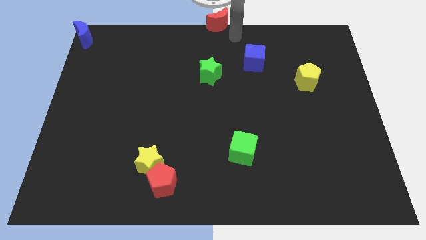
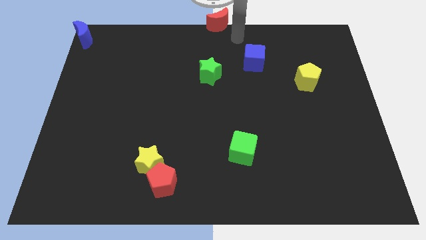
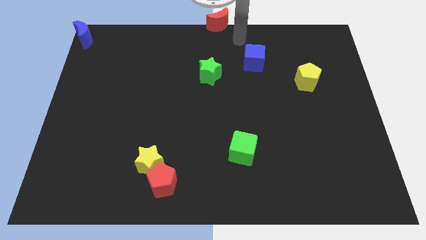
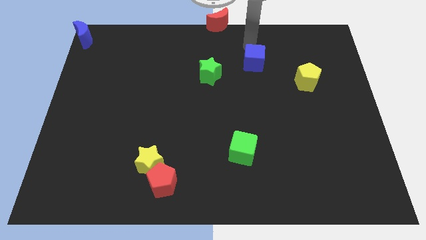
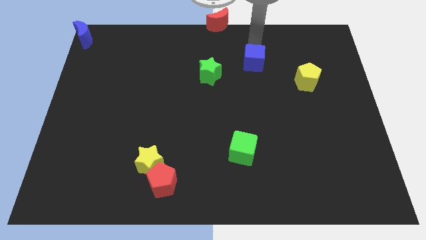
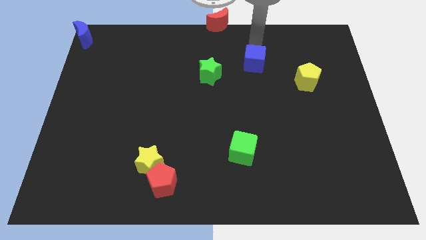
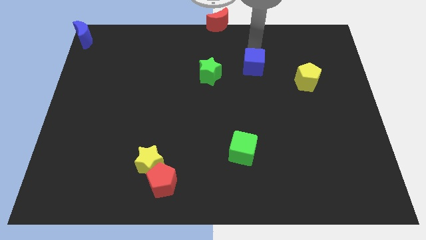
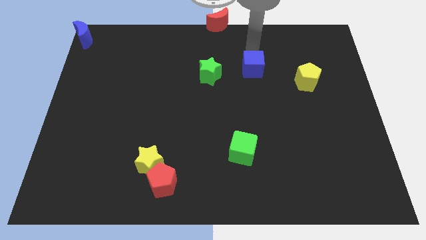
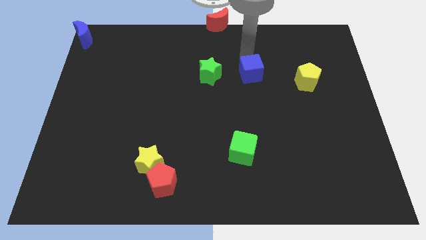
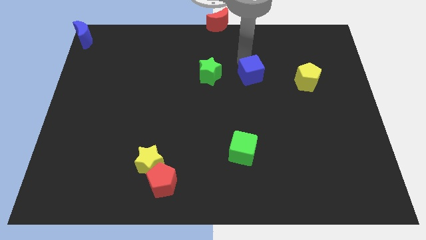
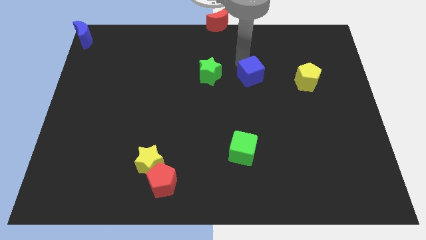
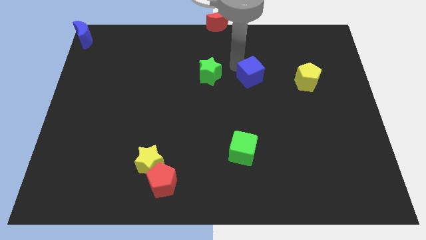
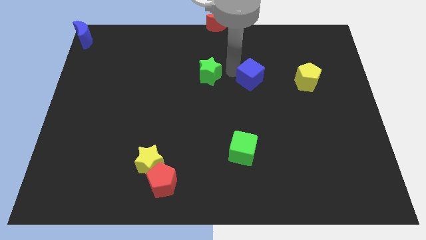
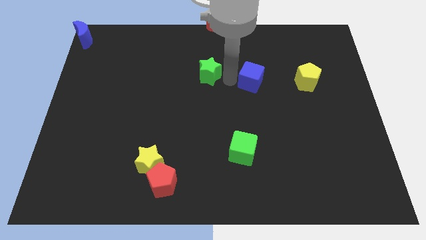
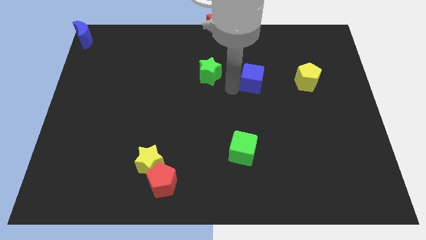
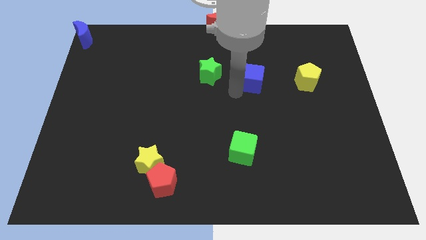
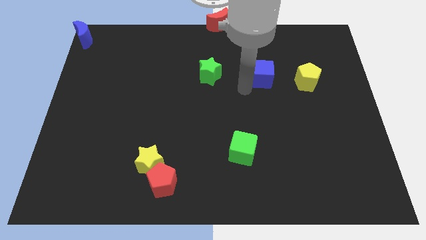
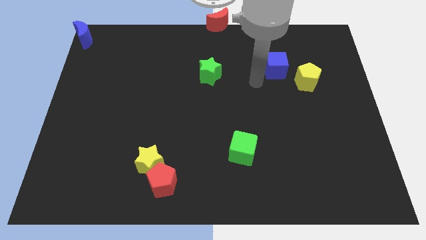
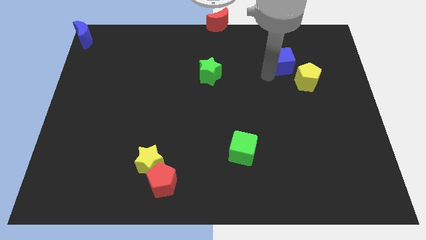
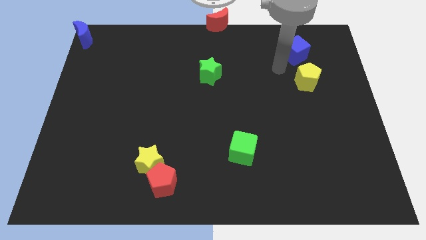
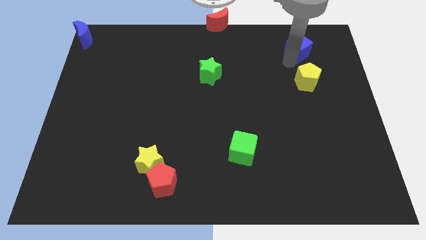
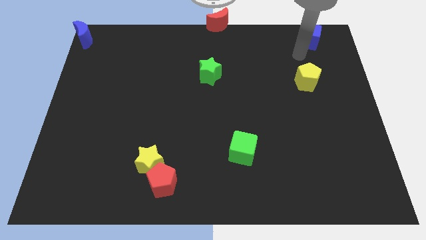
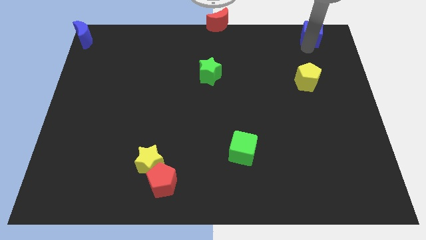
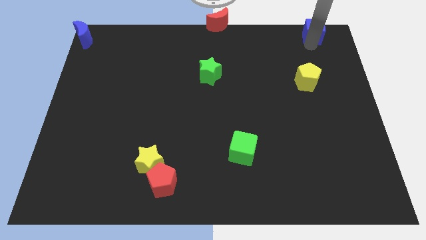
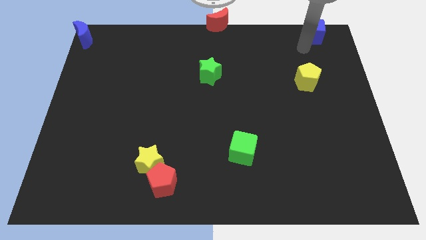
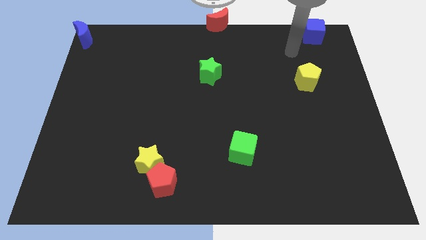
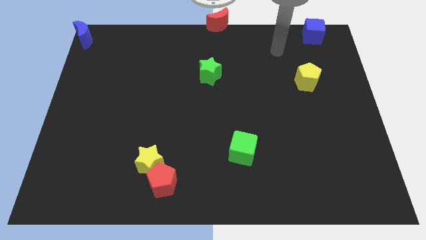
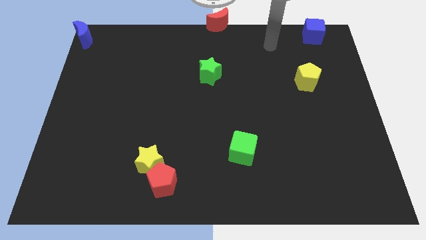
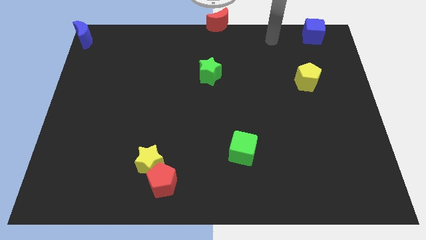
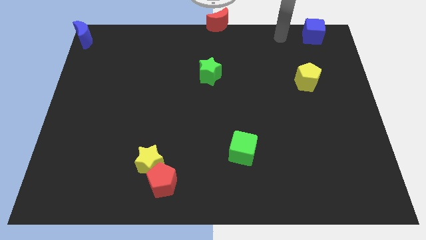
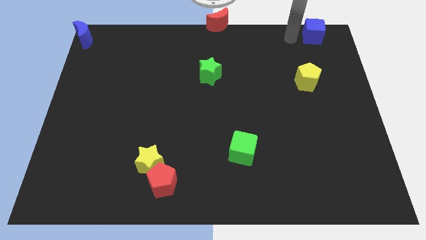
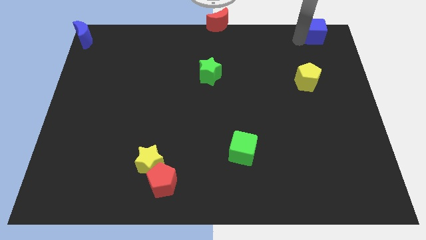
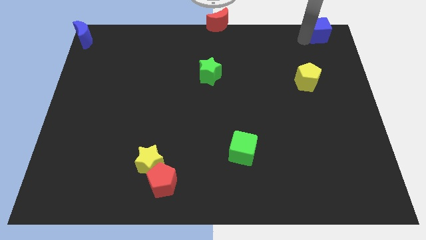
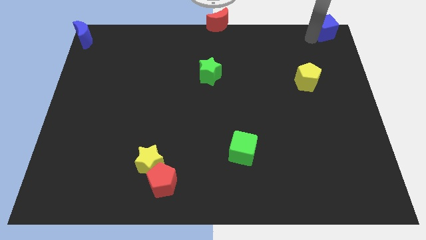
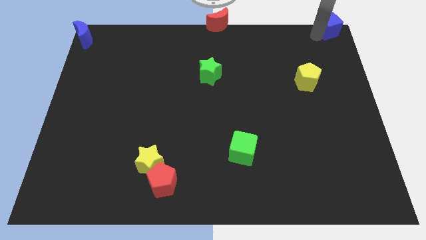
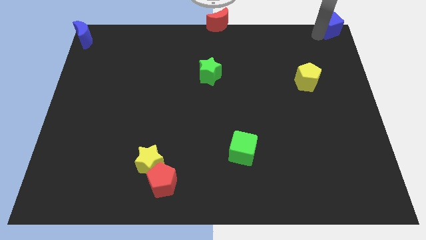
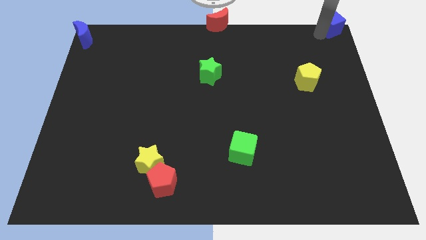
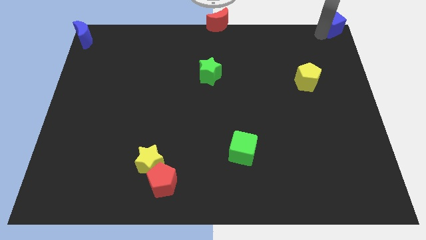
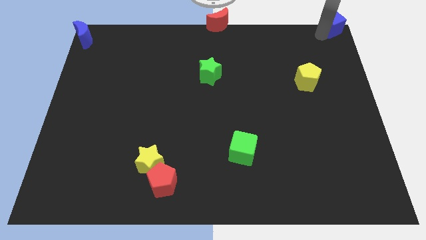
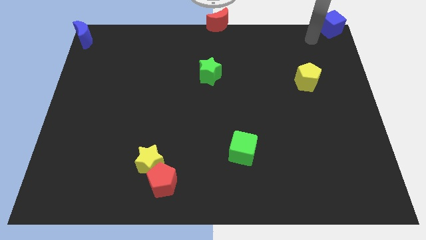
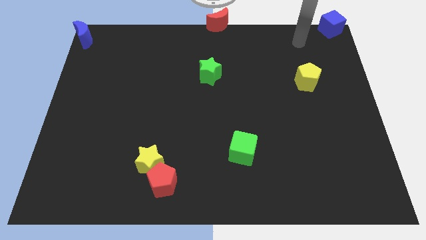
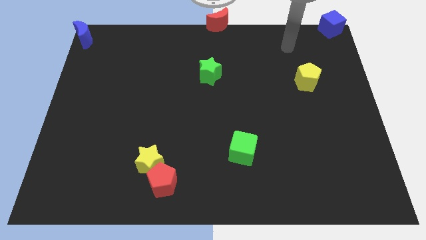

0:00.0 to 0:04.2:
place the blue cube to the top right corner of the board

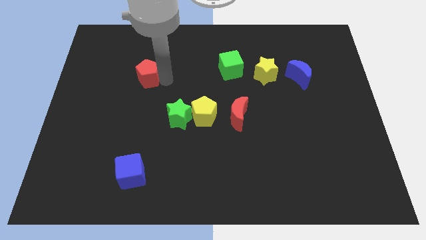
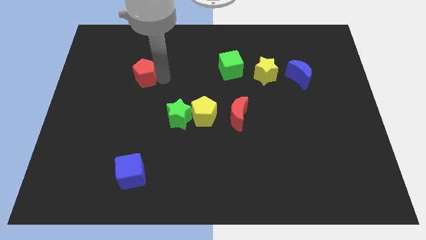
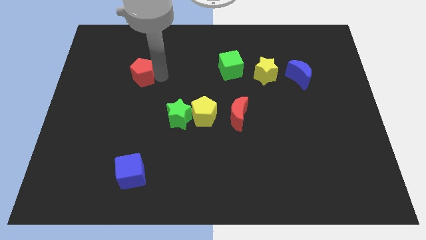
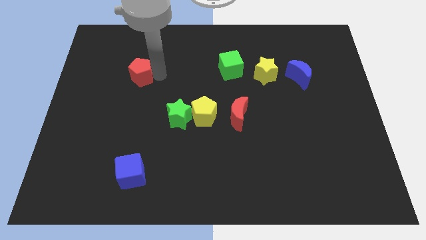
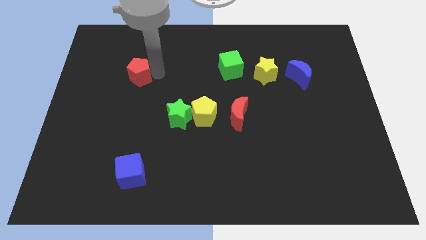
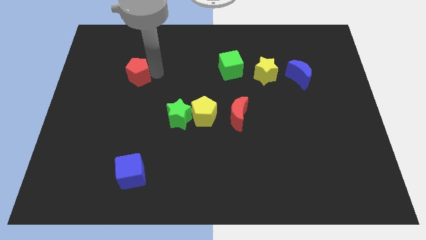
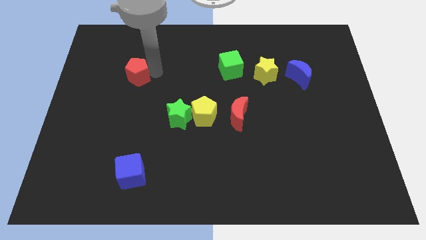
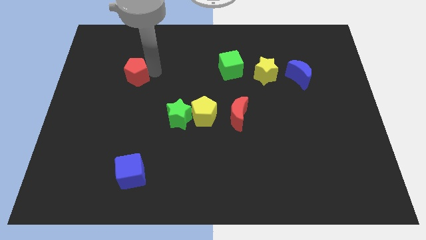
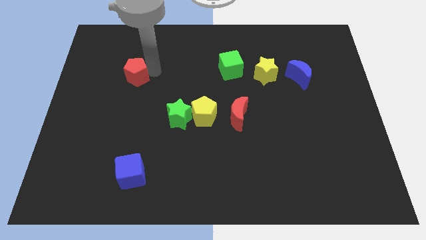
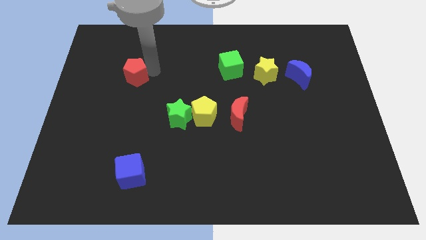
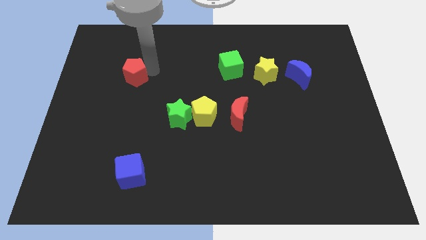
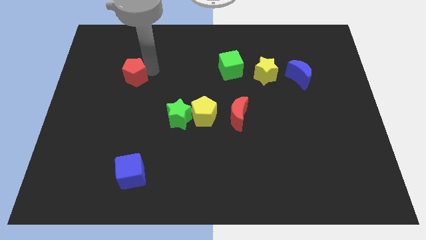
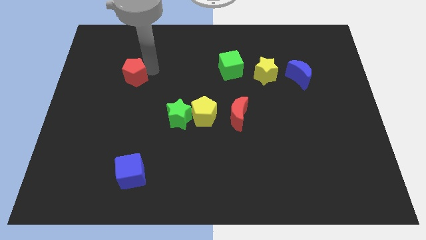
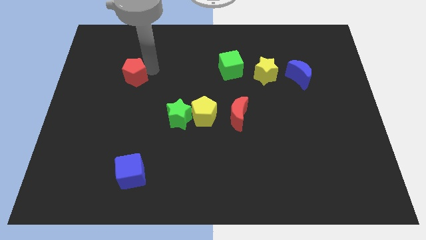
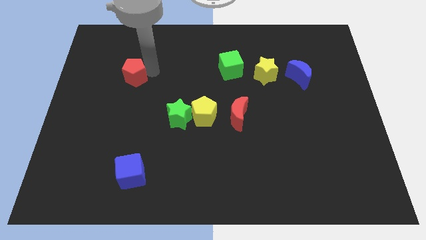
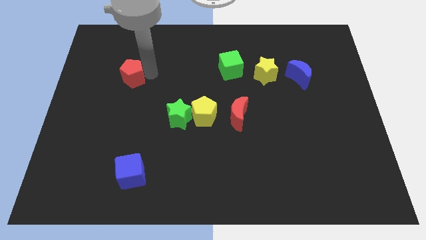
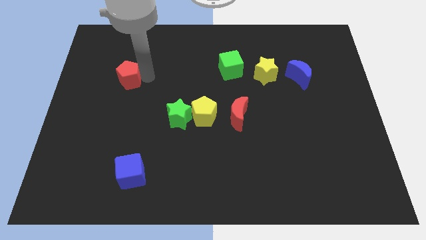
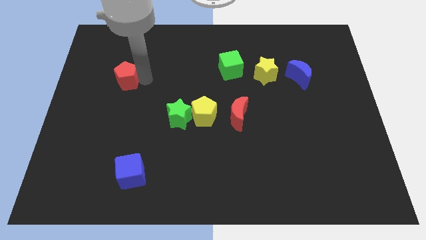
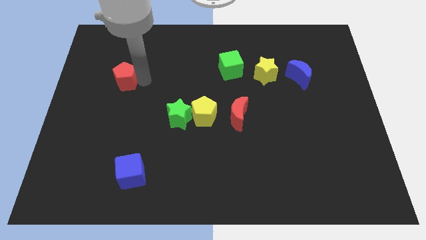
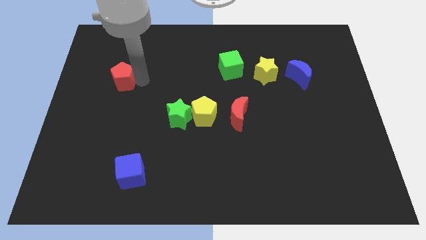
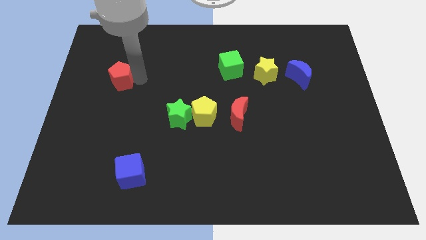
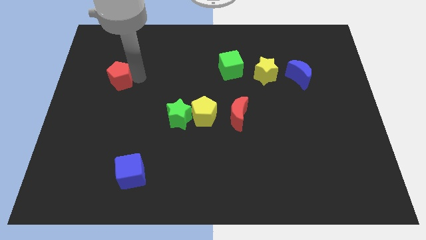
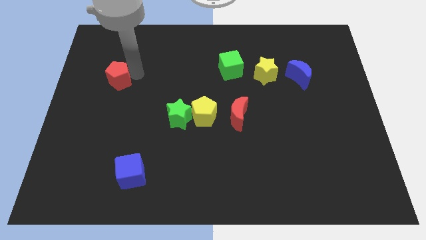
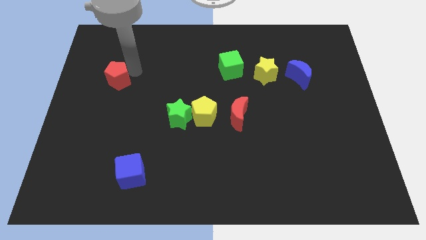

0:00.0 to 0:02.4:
push the red pentagon to the left

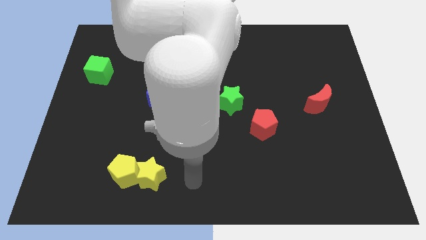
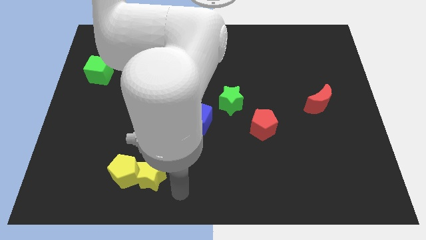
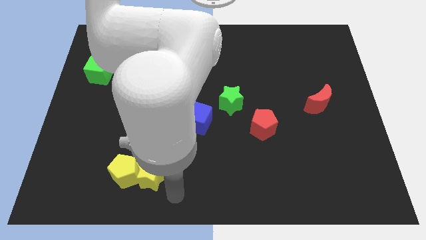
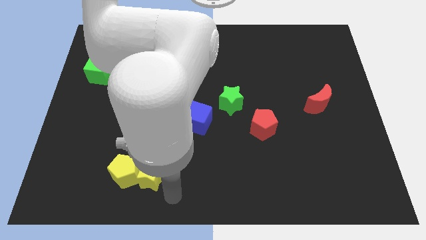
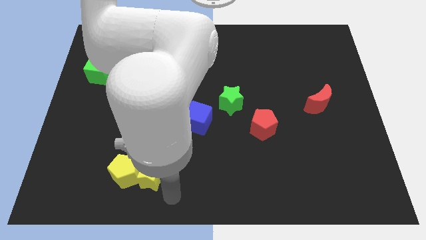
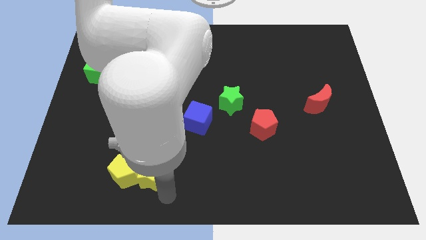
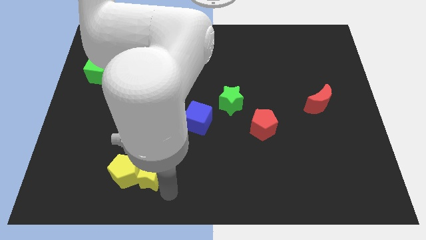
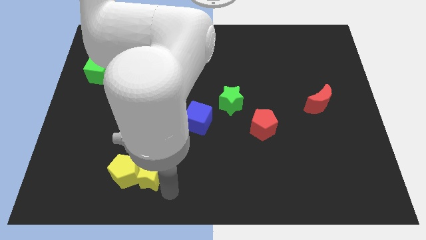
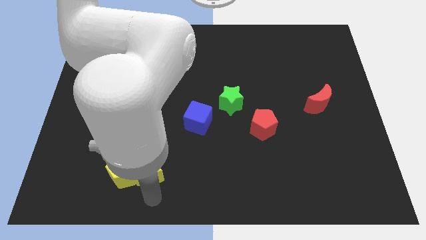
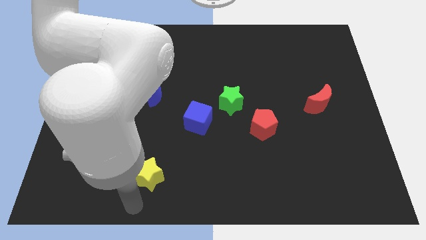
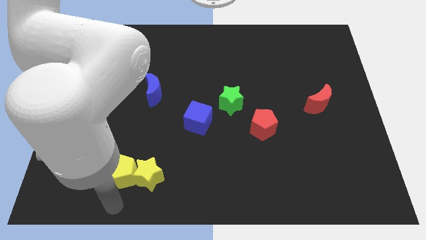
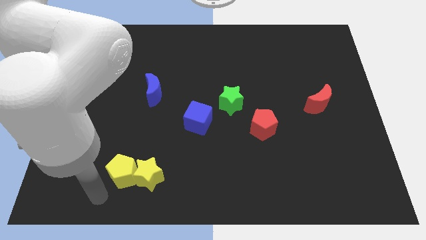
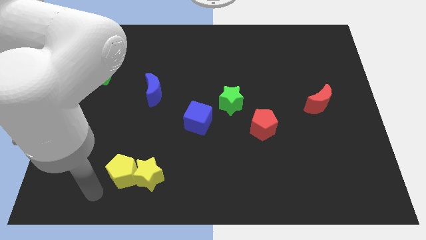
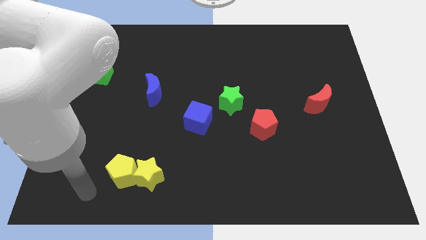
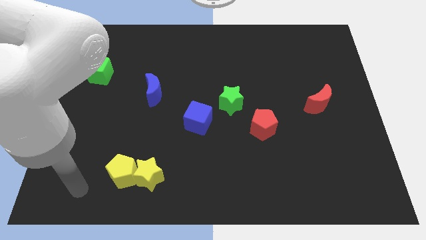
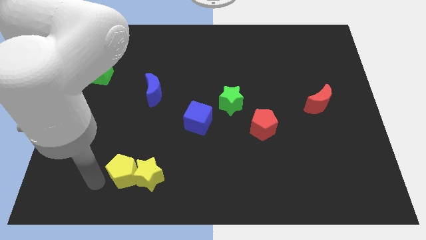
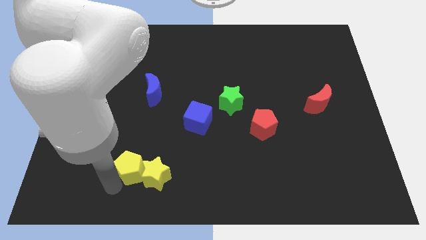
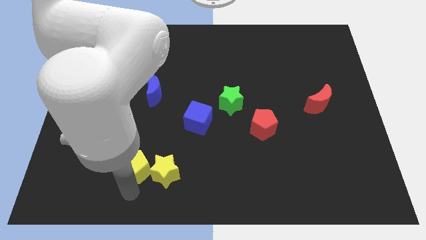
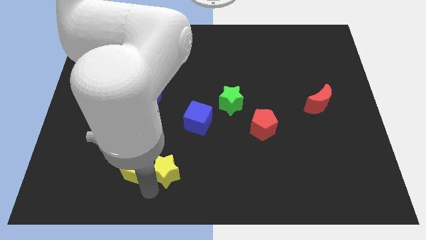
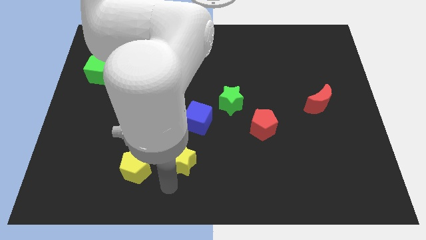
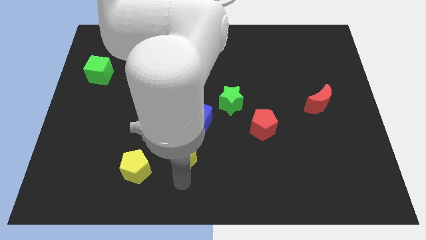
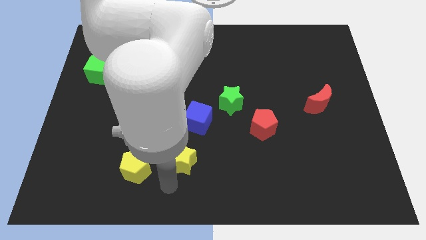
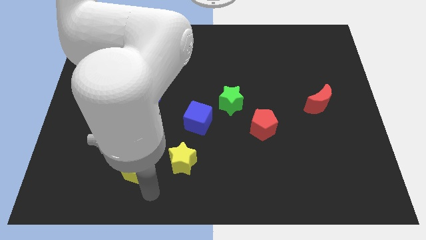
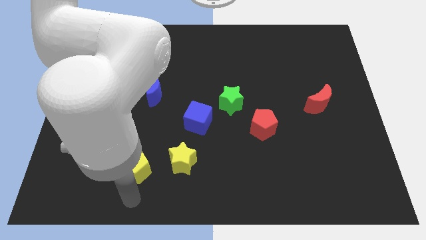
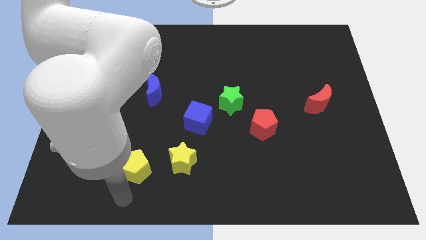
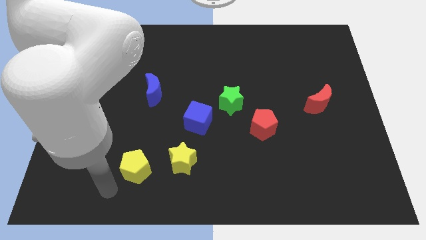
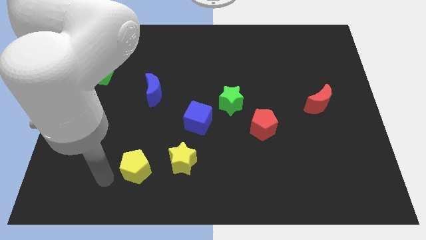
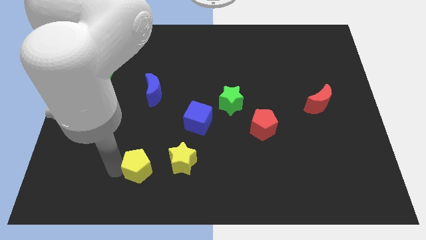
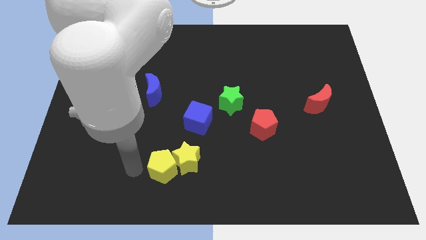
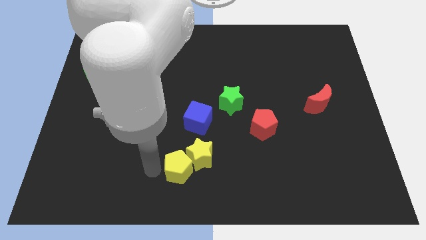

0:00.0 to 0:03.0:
push the yellow blocks towards the right side of the board
